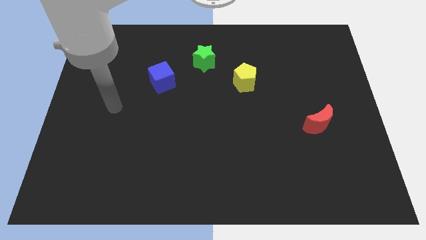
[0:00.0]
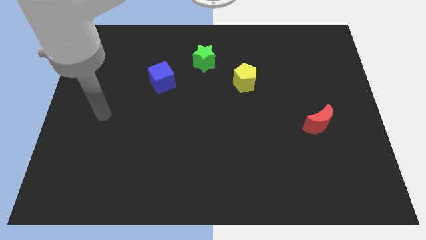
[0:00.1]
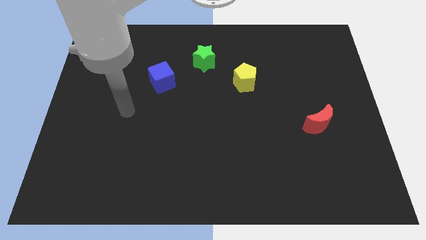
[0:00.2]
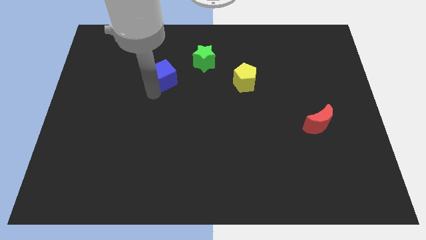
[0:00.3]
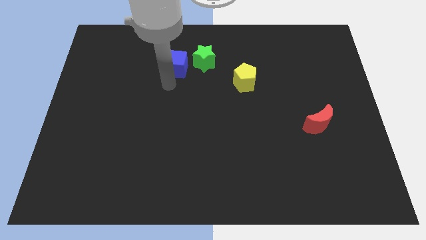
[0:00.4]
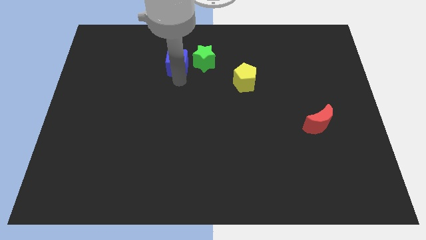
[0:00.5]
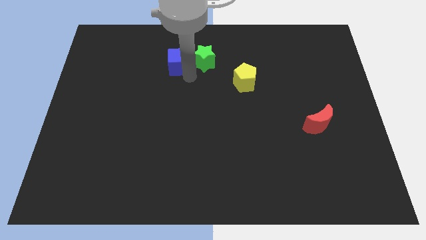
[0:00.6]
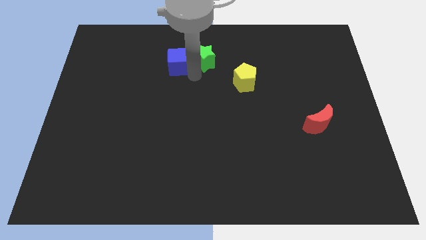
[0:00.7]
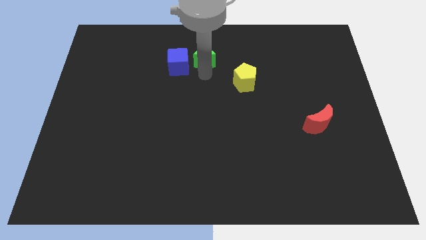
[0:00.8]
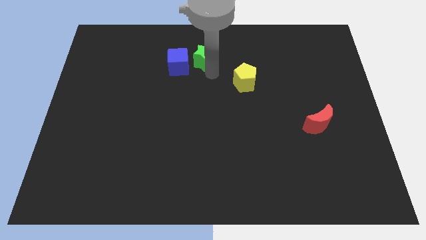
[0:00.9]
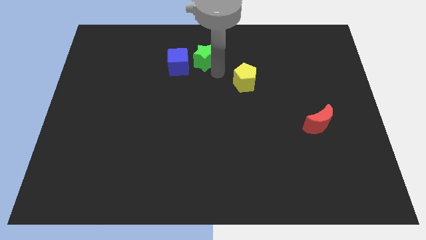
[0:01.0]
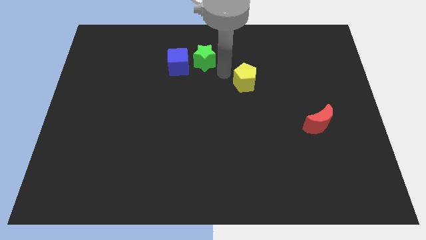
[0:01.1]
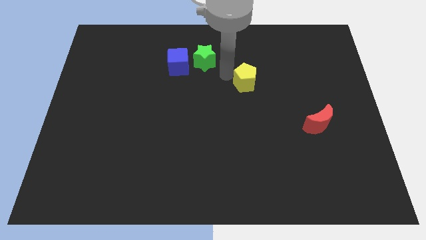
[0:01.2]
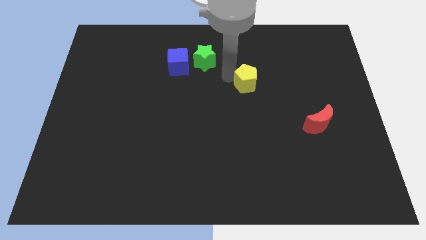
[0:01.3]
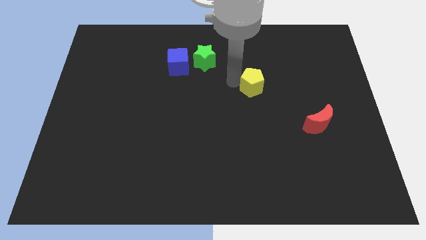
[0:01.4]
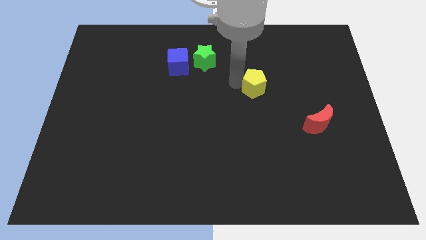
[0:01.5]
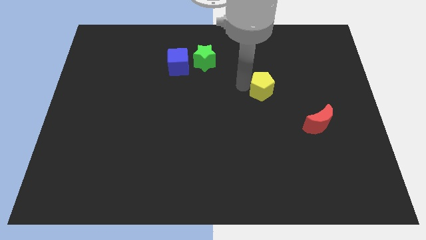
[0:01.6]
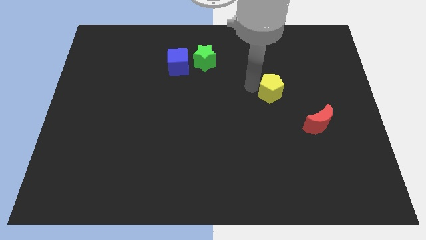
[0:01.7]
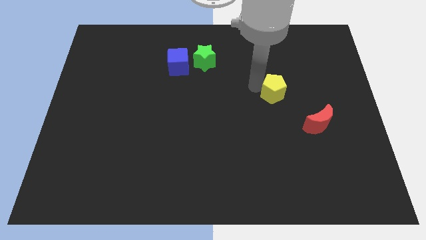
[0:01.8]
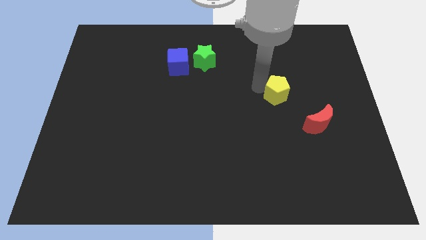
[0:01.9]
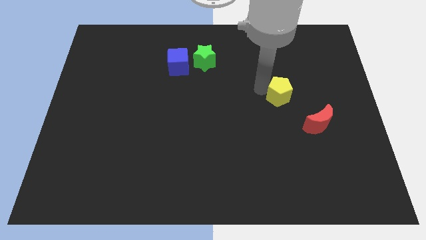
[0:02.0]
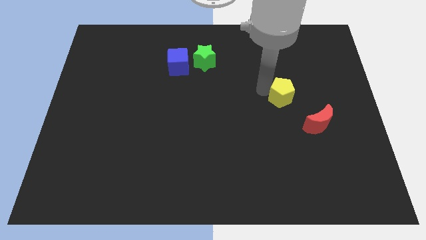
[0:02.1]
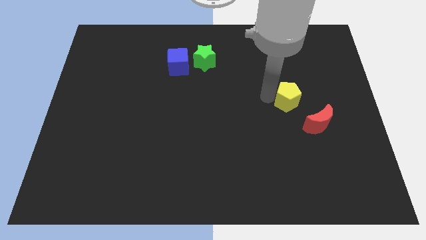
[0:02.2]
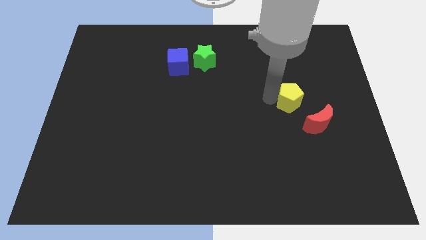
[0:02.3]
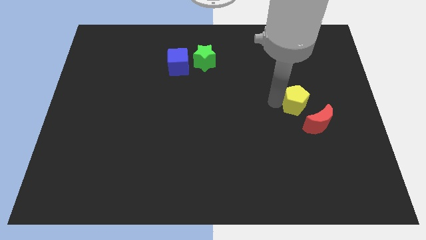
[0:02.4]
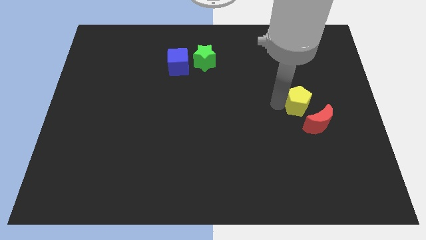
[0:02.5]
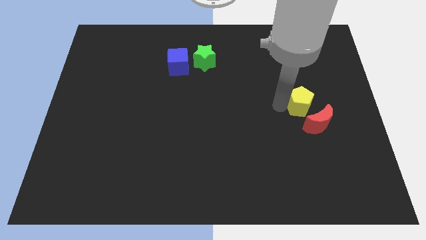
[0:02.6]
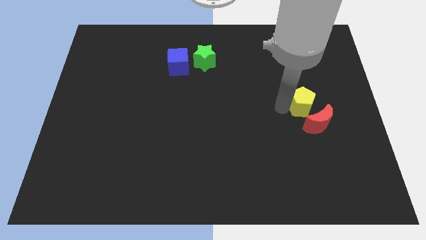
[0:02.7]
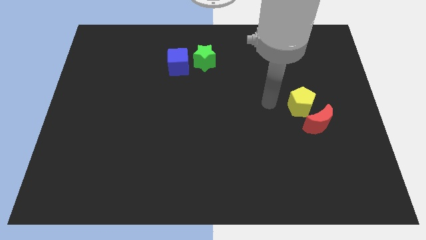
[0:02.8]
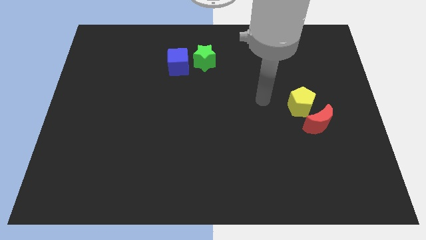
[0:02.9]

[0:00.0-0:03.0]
push the yellow block next to the moon

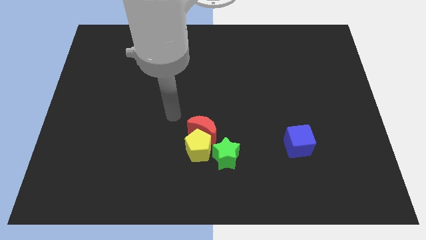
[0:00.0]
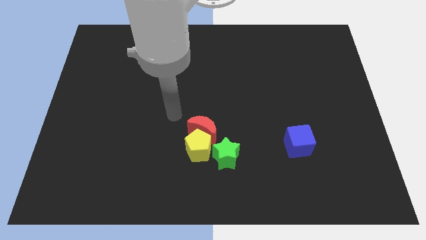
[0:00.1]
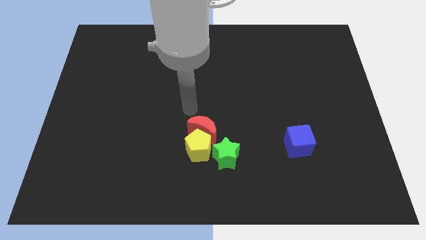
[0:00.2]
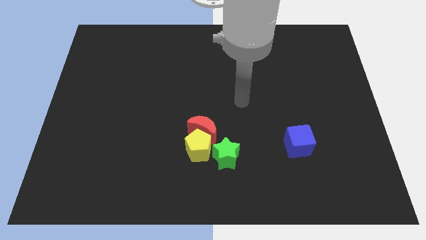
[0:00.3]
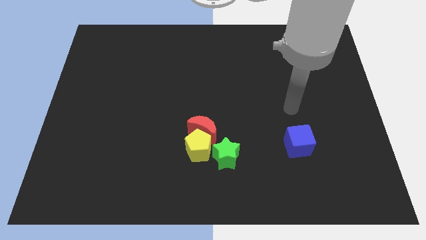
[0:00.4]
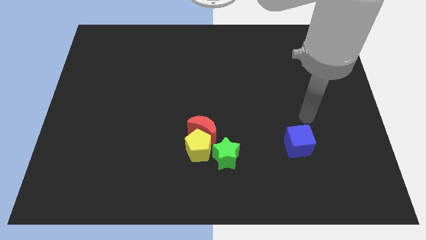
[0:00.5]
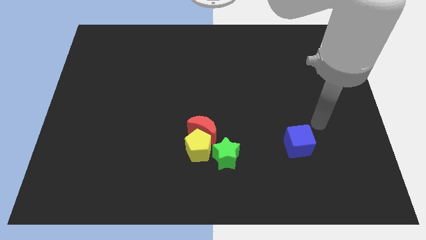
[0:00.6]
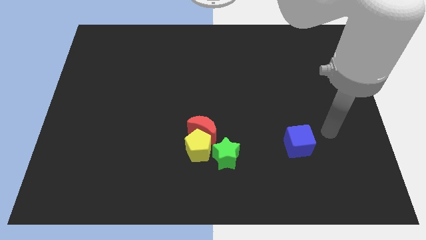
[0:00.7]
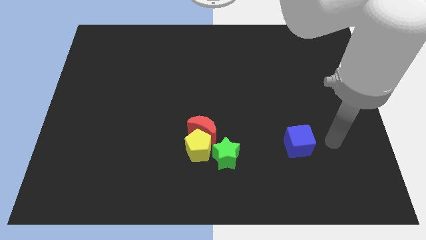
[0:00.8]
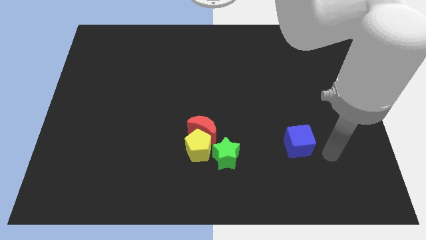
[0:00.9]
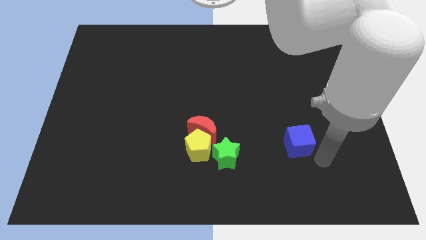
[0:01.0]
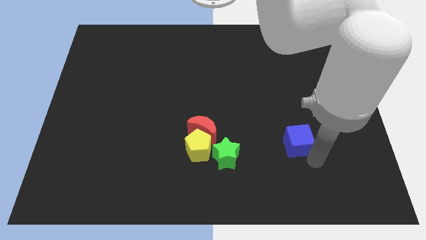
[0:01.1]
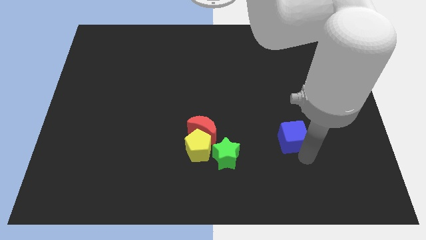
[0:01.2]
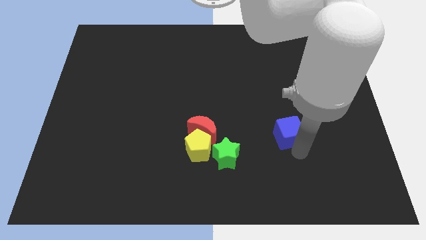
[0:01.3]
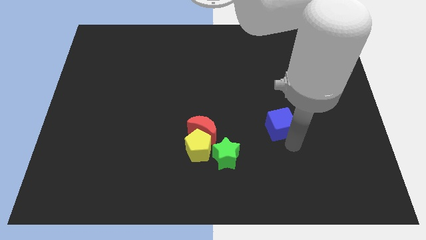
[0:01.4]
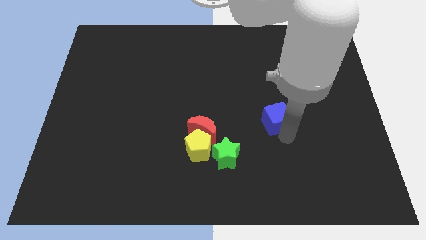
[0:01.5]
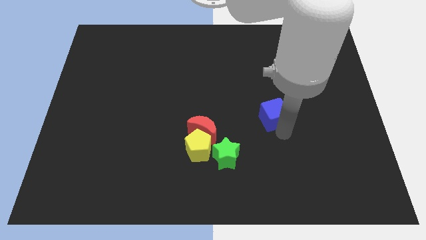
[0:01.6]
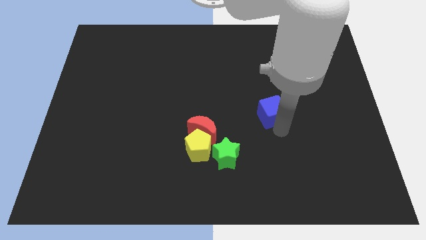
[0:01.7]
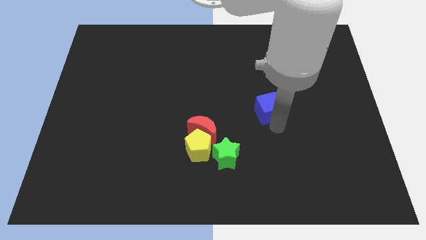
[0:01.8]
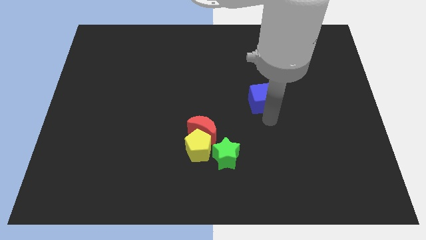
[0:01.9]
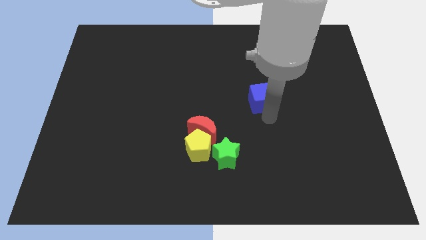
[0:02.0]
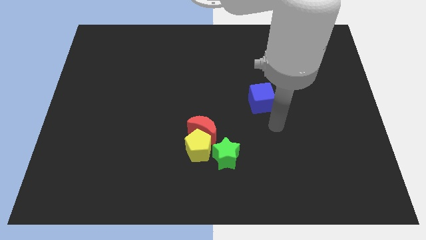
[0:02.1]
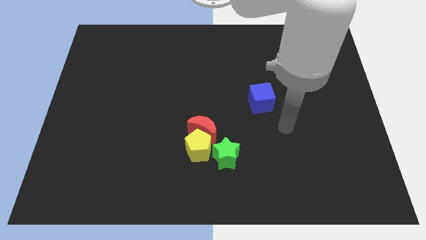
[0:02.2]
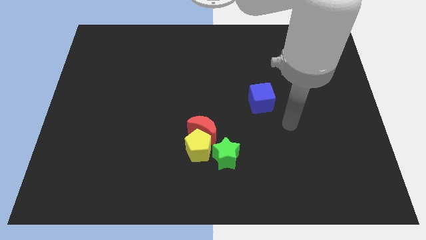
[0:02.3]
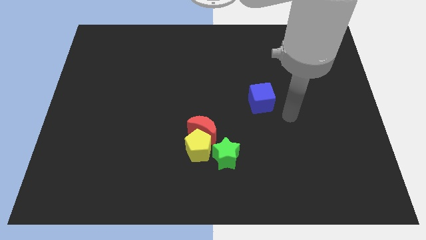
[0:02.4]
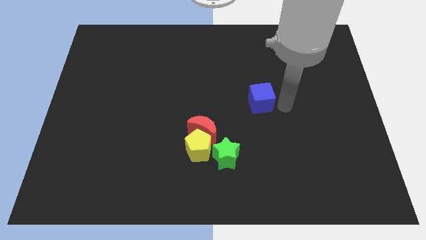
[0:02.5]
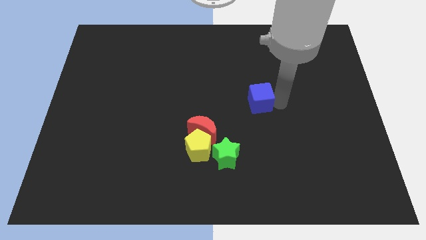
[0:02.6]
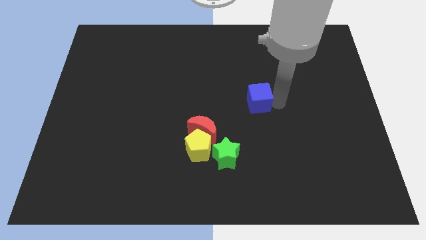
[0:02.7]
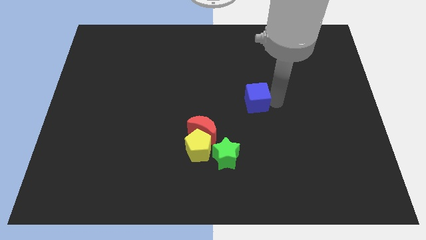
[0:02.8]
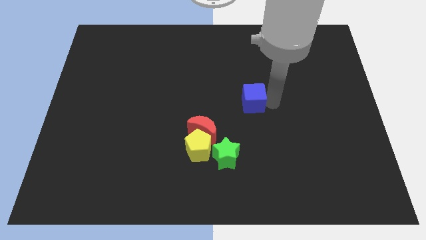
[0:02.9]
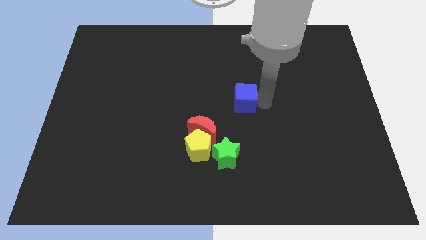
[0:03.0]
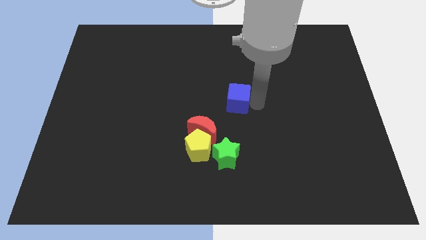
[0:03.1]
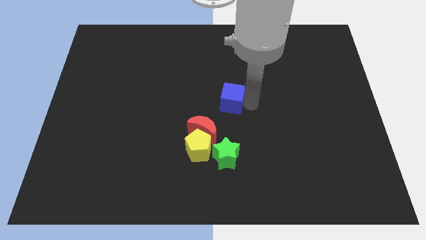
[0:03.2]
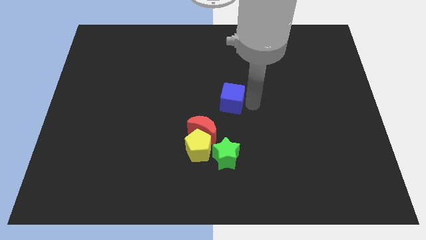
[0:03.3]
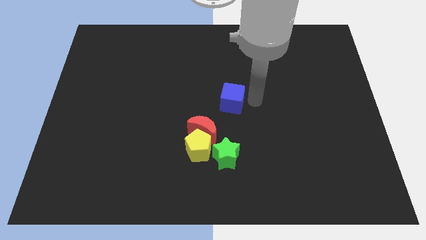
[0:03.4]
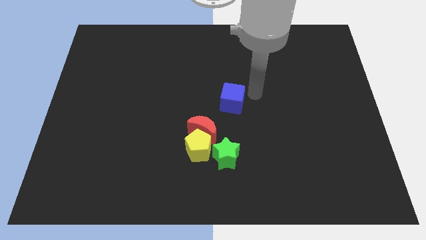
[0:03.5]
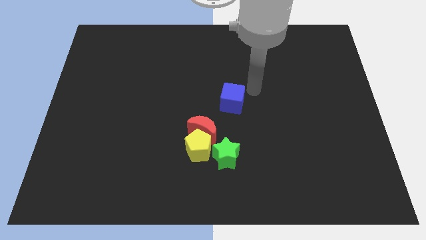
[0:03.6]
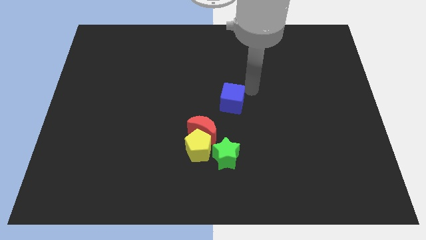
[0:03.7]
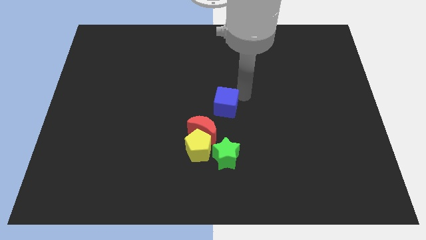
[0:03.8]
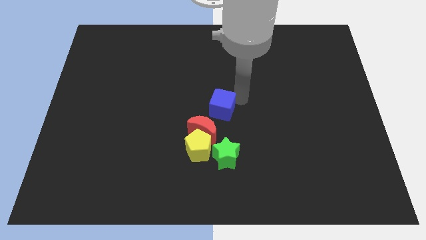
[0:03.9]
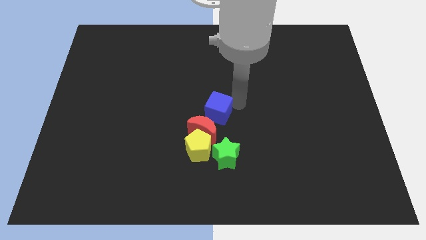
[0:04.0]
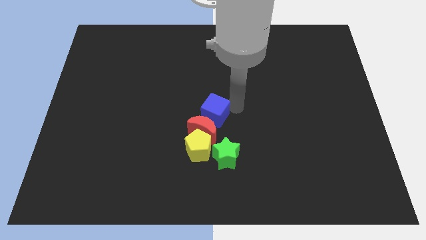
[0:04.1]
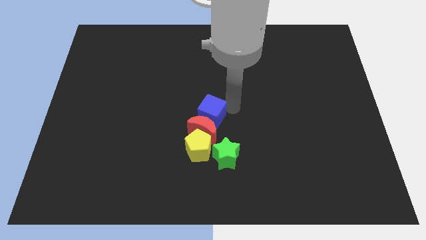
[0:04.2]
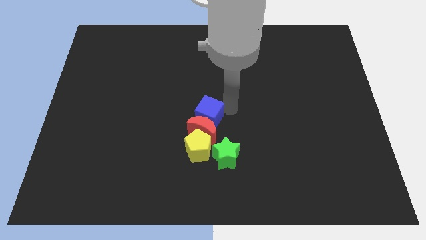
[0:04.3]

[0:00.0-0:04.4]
move the blue cube towards the moon

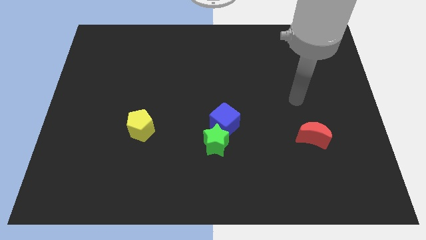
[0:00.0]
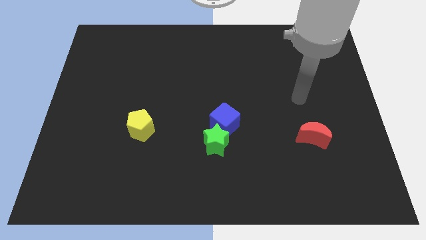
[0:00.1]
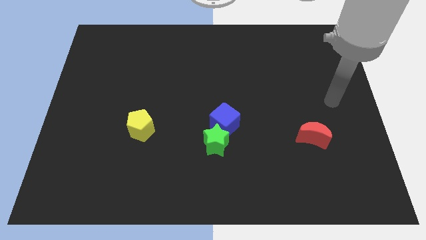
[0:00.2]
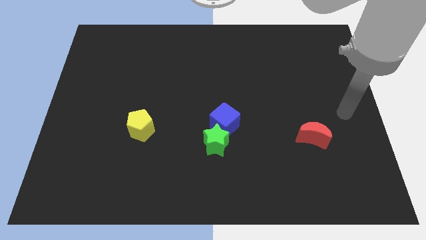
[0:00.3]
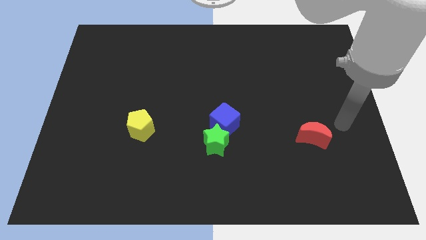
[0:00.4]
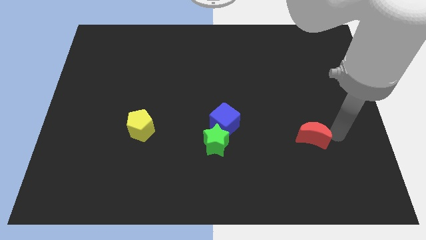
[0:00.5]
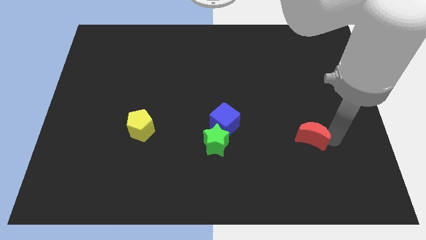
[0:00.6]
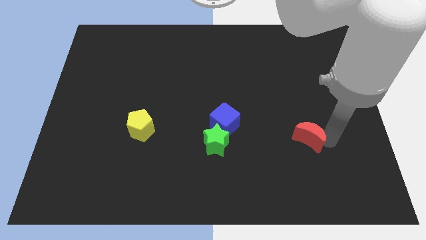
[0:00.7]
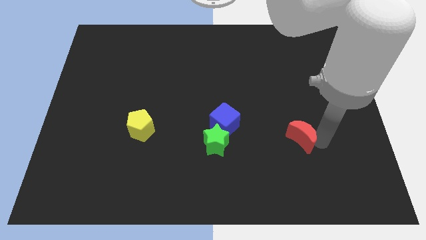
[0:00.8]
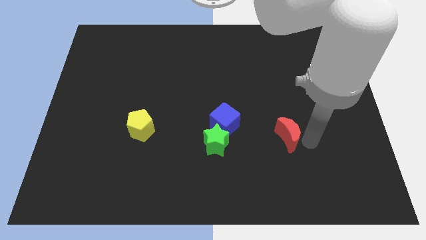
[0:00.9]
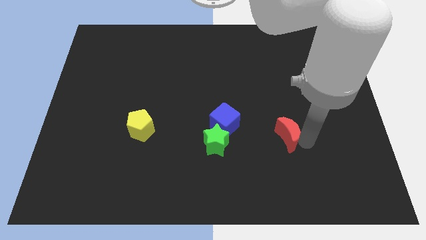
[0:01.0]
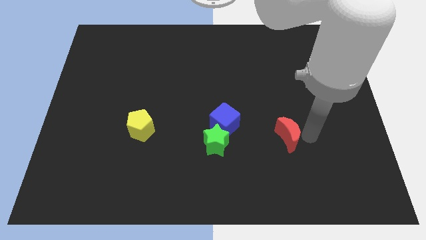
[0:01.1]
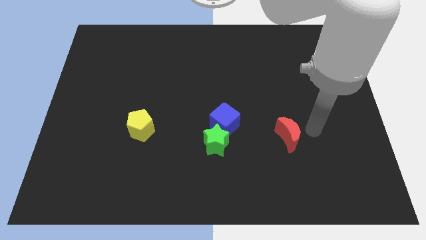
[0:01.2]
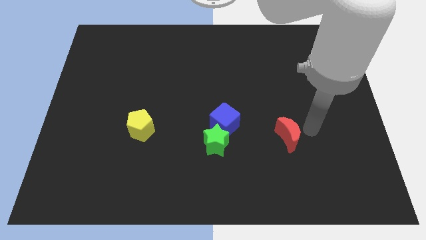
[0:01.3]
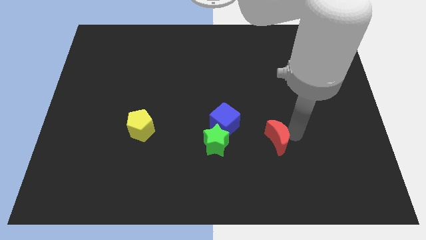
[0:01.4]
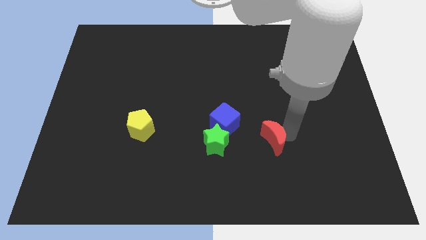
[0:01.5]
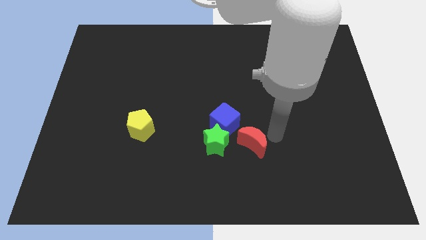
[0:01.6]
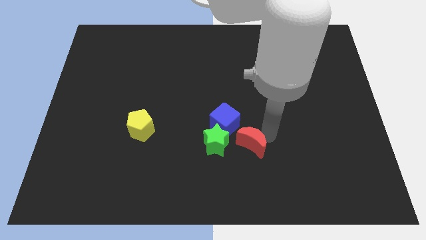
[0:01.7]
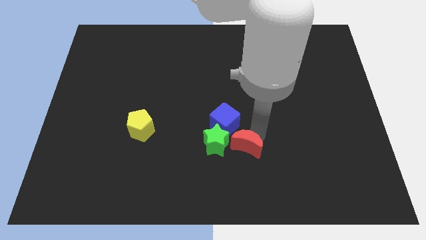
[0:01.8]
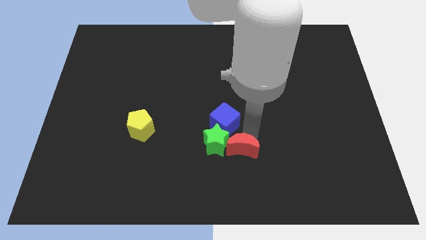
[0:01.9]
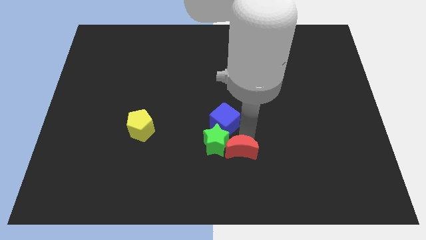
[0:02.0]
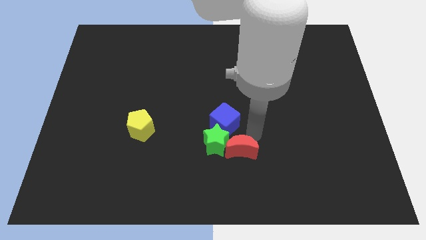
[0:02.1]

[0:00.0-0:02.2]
move the red moon to the star
